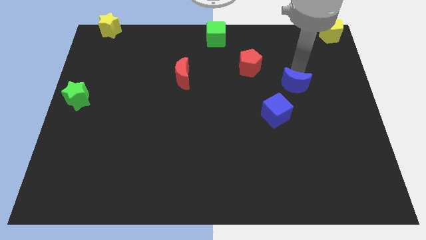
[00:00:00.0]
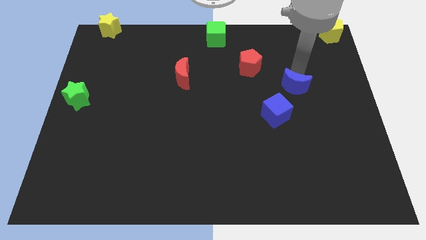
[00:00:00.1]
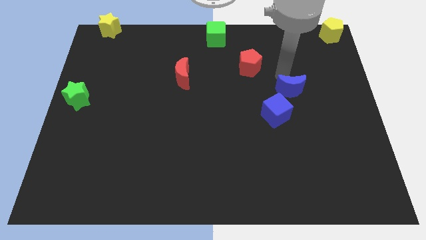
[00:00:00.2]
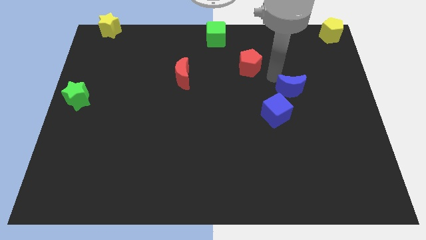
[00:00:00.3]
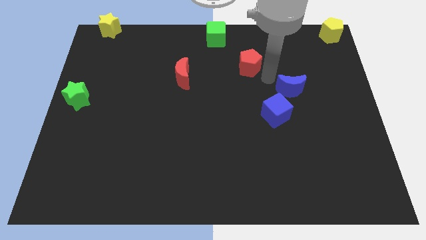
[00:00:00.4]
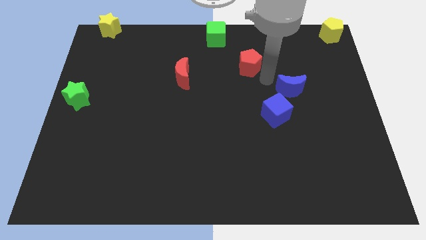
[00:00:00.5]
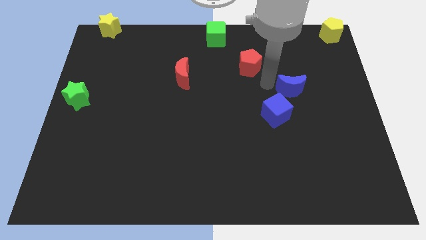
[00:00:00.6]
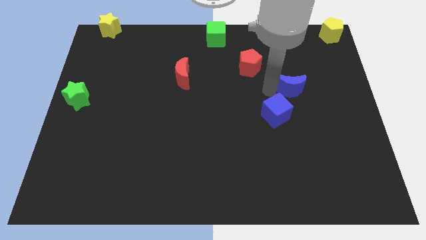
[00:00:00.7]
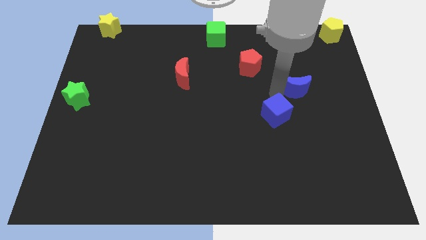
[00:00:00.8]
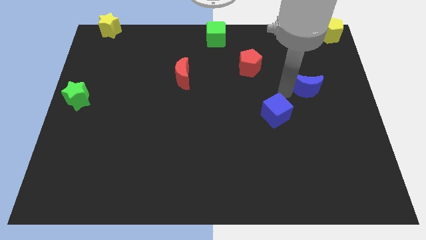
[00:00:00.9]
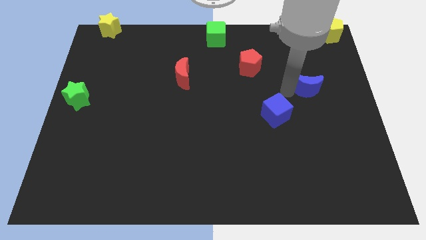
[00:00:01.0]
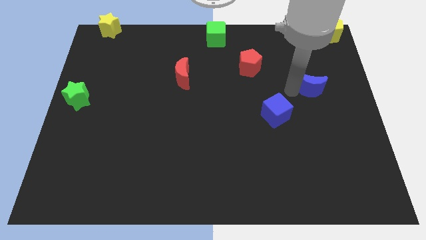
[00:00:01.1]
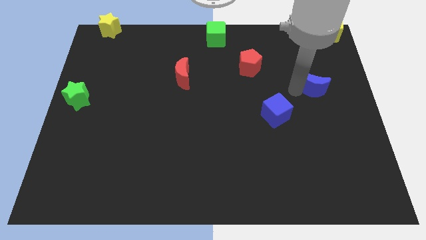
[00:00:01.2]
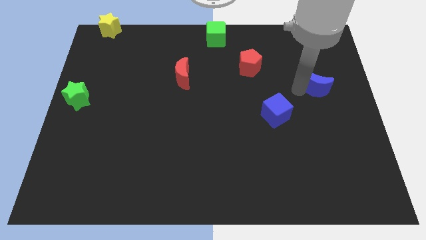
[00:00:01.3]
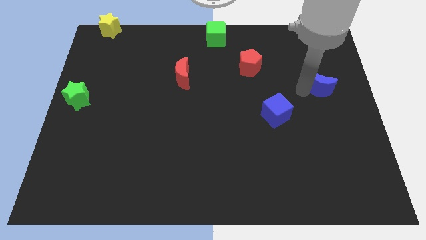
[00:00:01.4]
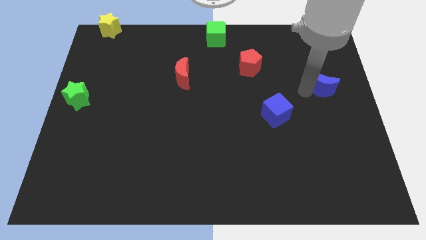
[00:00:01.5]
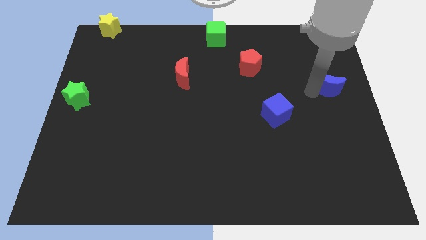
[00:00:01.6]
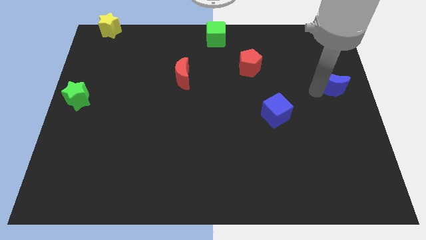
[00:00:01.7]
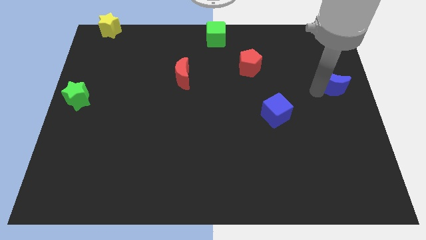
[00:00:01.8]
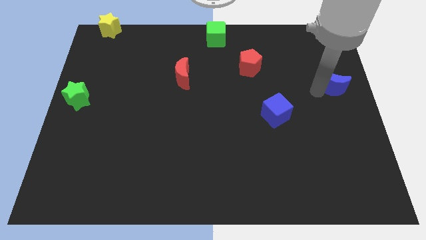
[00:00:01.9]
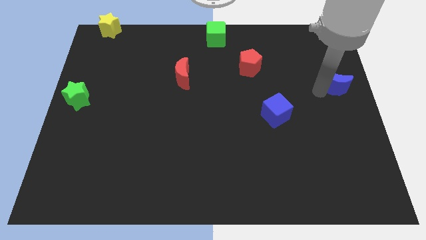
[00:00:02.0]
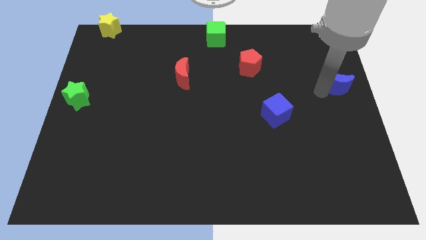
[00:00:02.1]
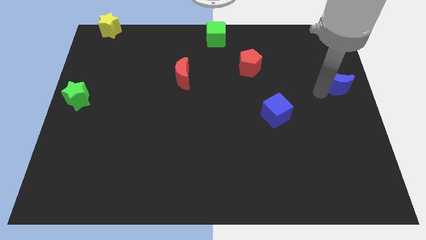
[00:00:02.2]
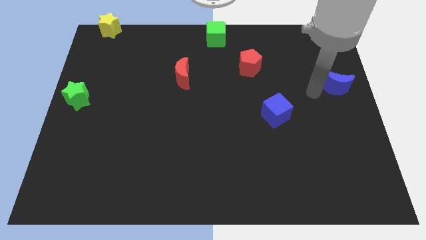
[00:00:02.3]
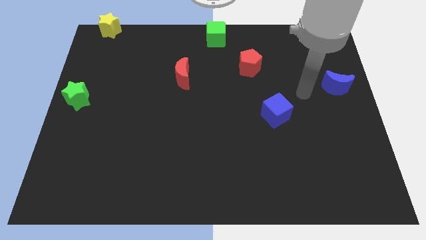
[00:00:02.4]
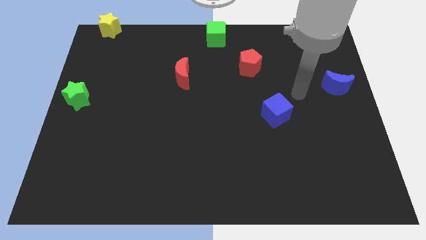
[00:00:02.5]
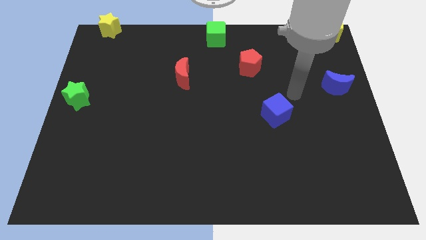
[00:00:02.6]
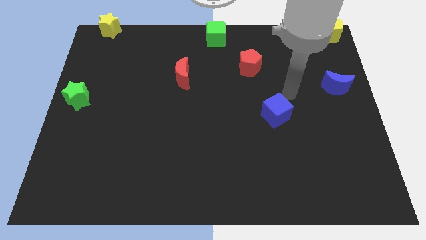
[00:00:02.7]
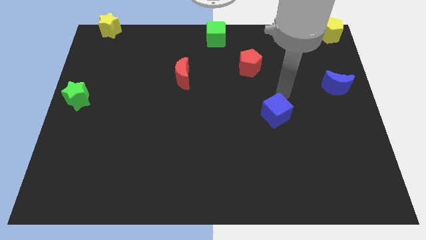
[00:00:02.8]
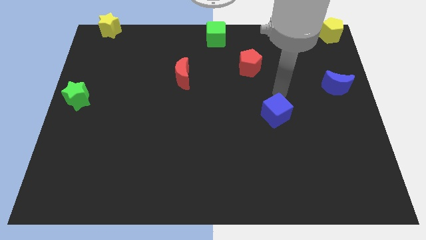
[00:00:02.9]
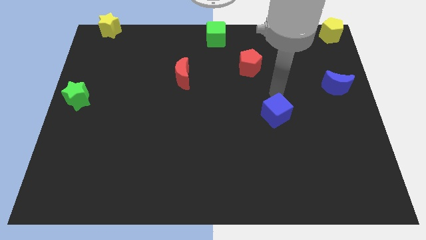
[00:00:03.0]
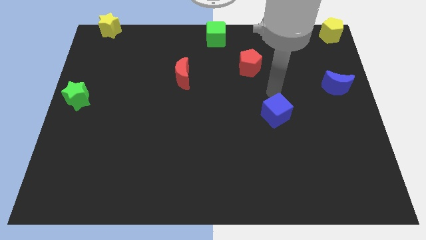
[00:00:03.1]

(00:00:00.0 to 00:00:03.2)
slide the blue crescent vertically below the yellow pentagon

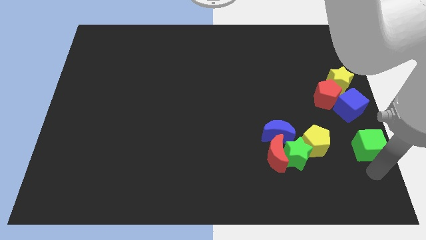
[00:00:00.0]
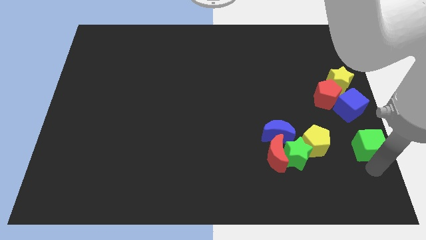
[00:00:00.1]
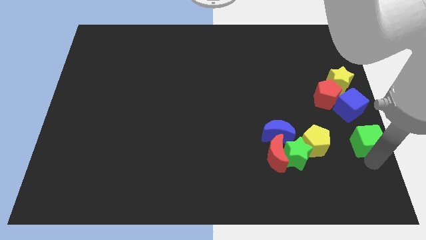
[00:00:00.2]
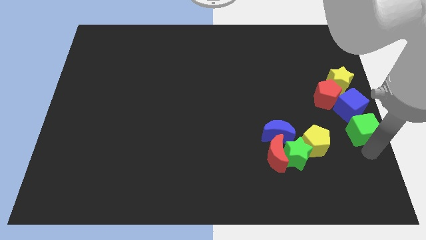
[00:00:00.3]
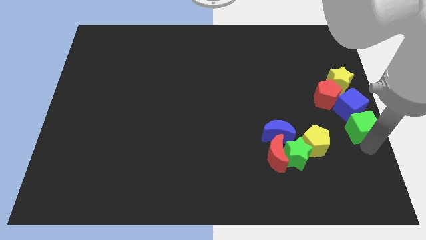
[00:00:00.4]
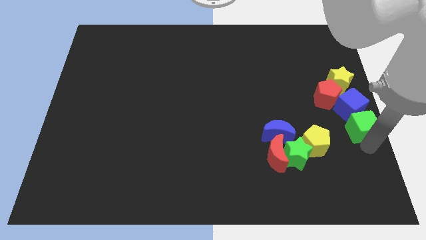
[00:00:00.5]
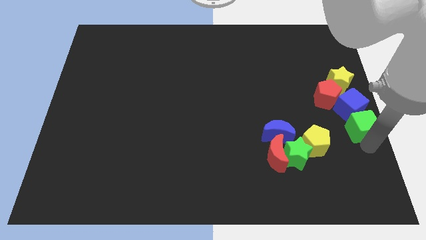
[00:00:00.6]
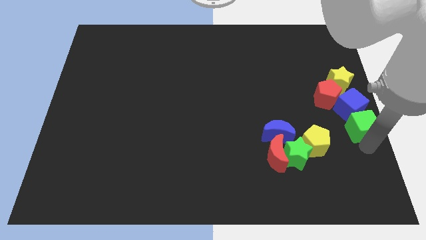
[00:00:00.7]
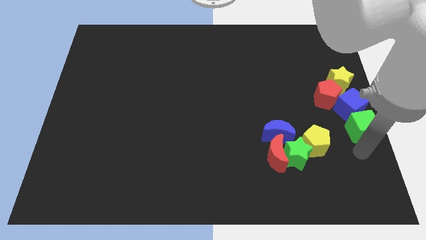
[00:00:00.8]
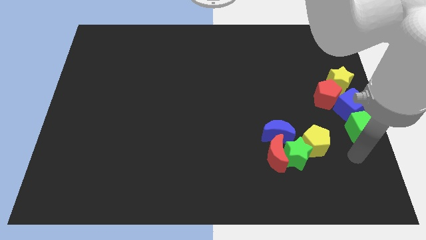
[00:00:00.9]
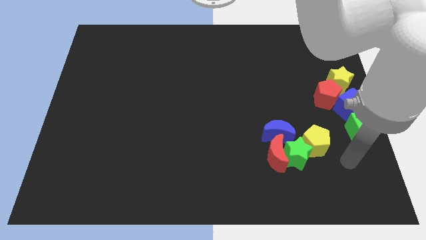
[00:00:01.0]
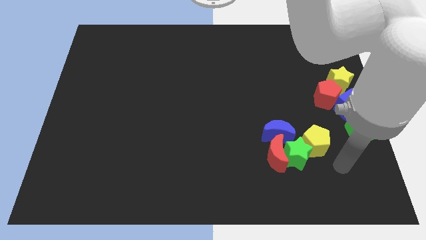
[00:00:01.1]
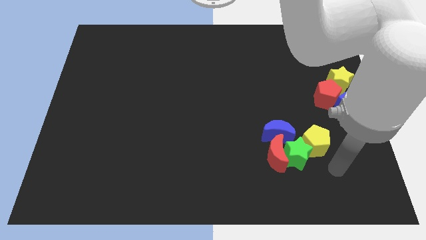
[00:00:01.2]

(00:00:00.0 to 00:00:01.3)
place green cube towards the bottom of the blue cube

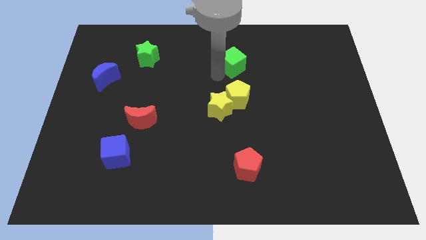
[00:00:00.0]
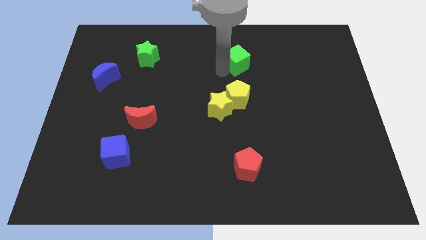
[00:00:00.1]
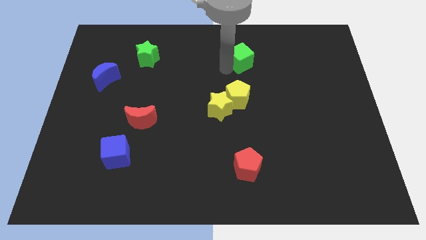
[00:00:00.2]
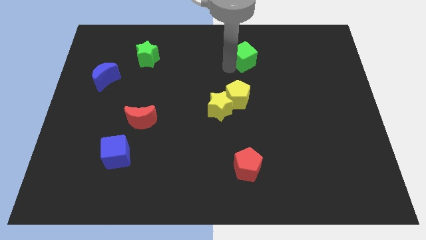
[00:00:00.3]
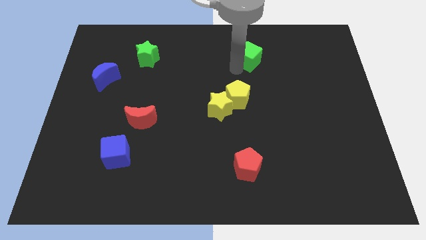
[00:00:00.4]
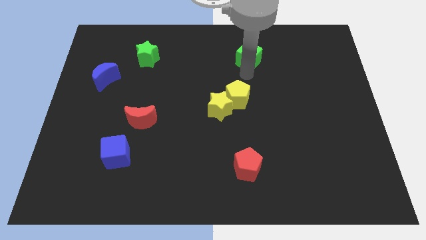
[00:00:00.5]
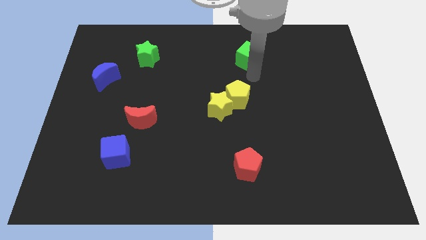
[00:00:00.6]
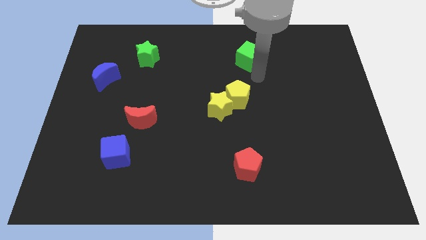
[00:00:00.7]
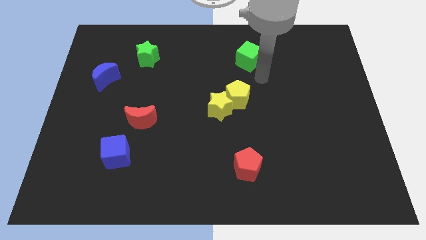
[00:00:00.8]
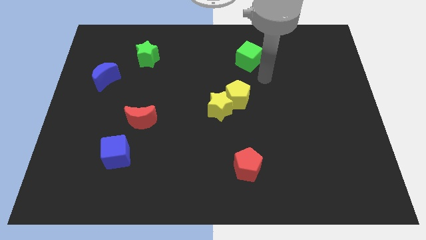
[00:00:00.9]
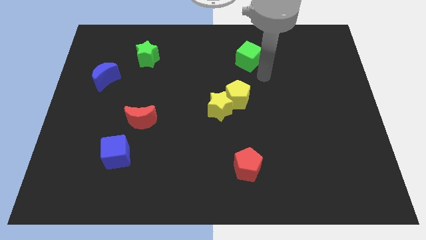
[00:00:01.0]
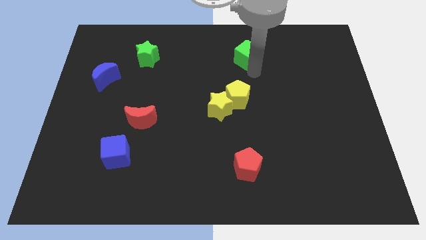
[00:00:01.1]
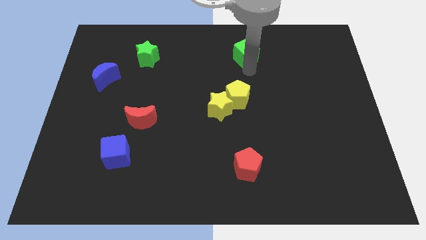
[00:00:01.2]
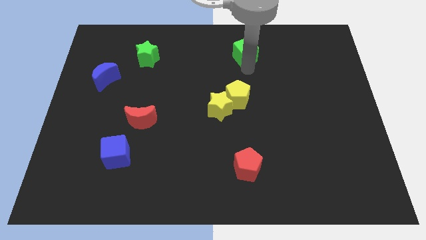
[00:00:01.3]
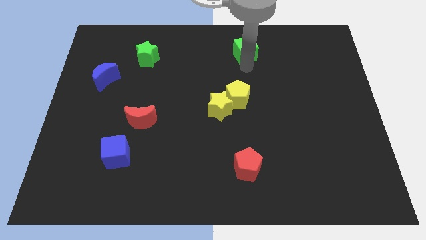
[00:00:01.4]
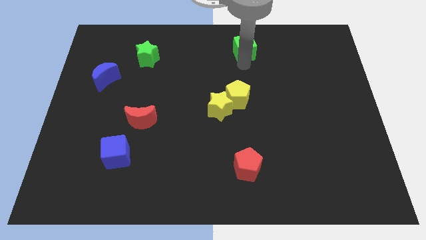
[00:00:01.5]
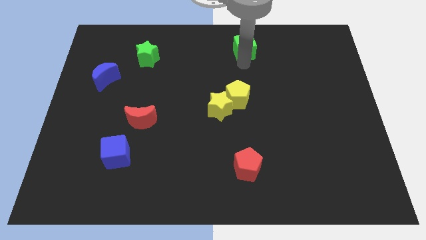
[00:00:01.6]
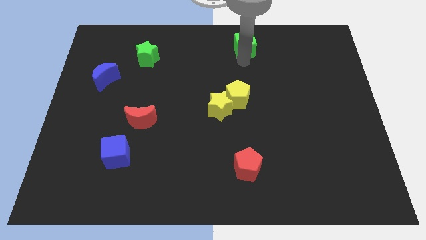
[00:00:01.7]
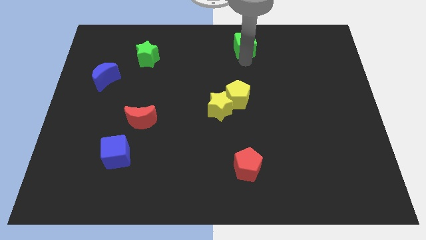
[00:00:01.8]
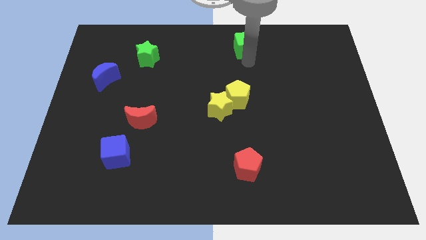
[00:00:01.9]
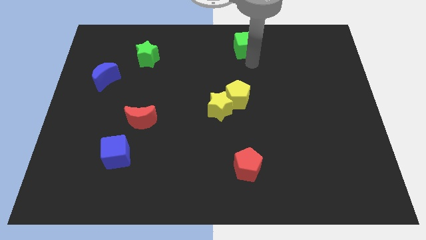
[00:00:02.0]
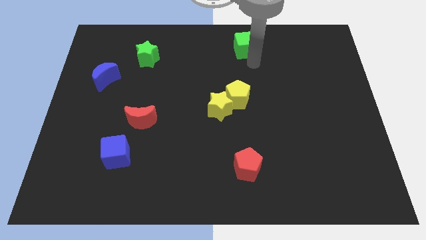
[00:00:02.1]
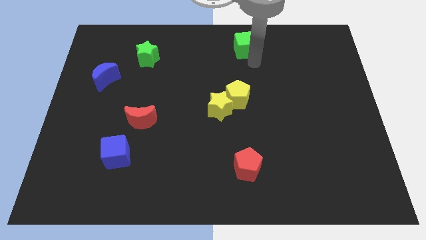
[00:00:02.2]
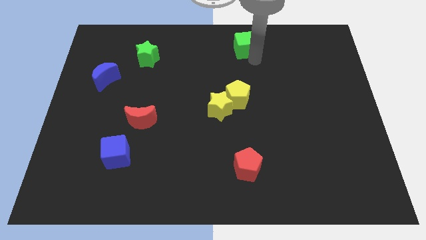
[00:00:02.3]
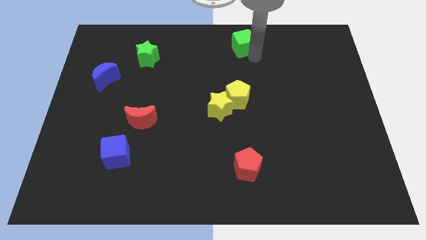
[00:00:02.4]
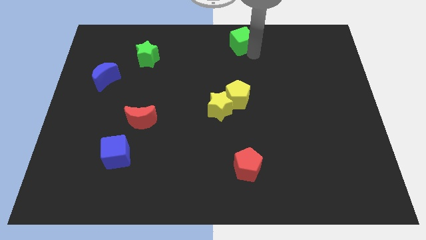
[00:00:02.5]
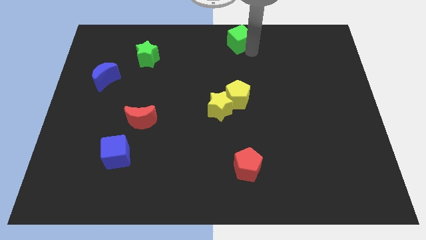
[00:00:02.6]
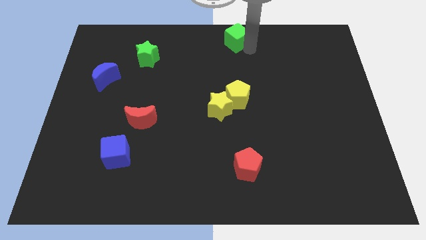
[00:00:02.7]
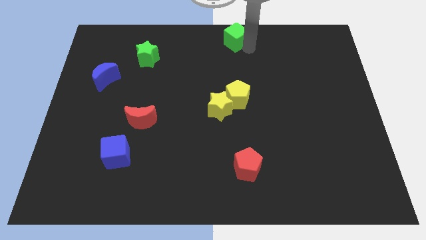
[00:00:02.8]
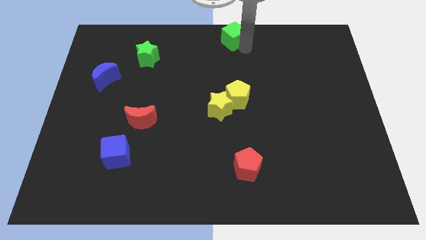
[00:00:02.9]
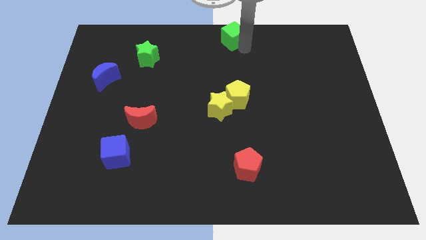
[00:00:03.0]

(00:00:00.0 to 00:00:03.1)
move the green cube towards the top side of the board

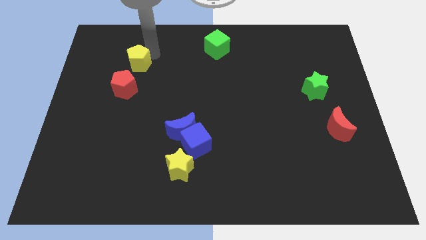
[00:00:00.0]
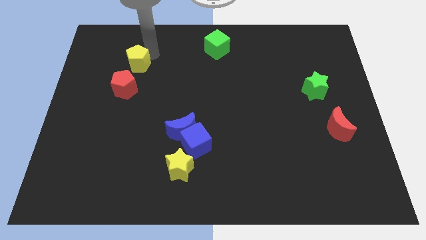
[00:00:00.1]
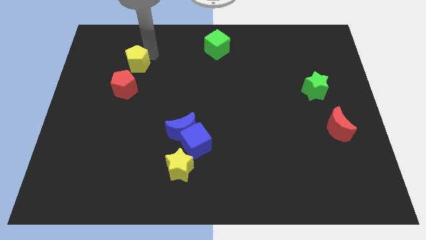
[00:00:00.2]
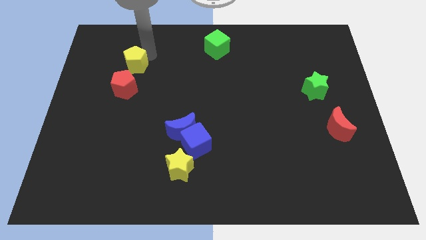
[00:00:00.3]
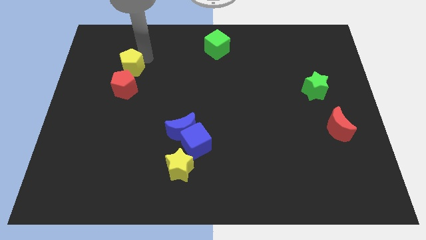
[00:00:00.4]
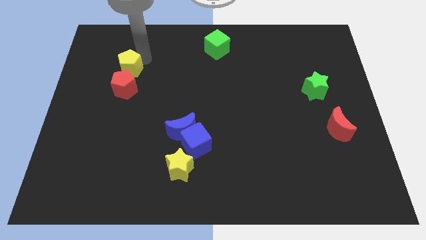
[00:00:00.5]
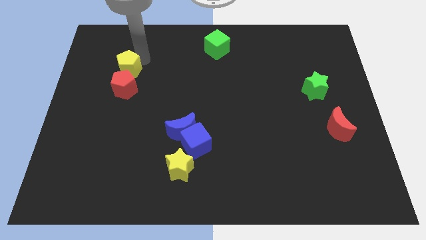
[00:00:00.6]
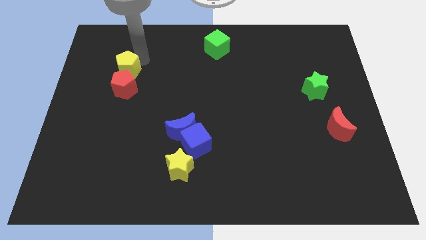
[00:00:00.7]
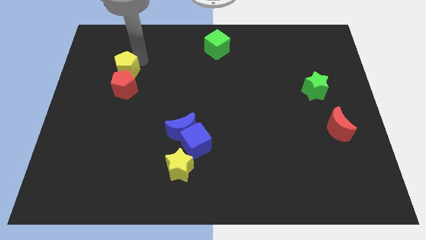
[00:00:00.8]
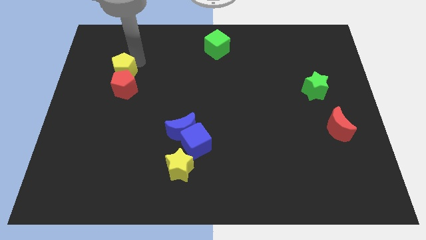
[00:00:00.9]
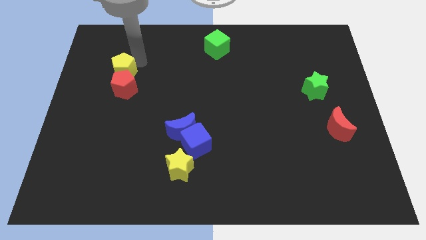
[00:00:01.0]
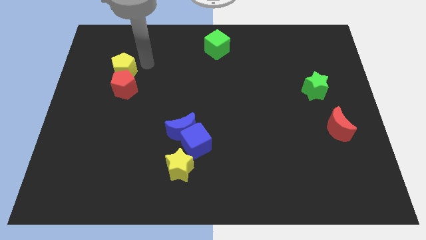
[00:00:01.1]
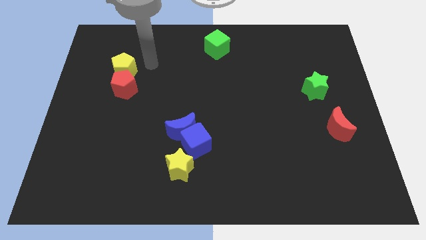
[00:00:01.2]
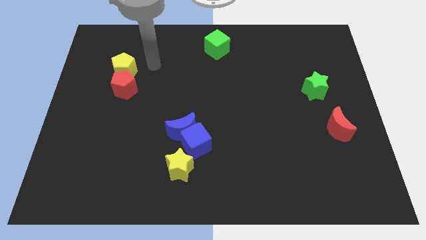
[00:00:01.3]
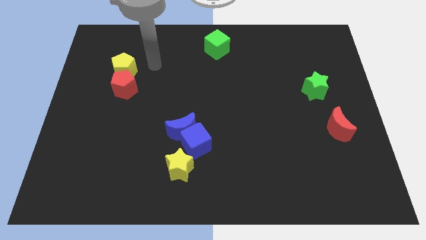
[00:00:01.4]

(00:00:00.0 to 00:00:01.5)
put the yellow pentagon above the red pentagon
